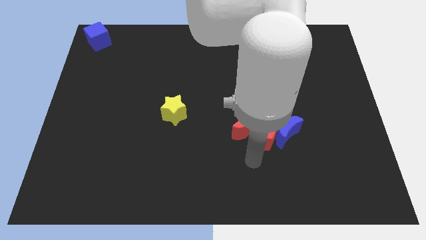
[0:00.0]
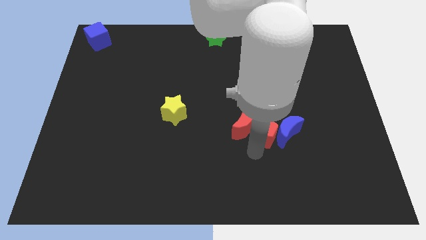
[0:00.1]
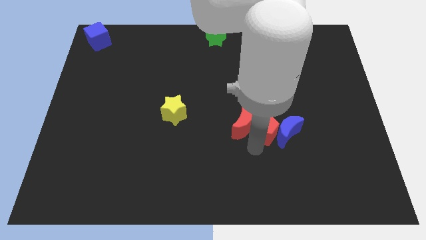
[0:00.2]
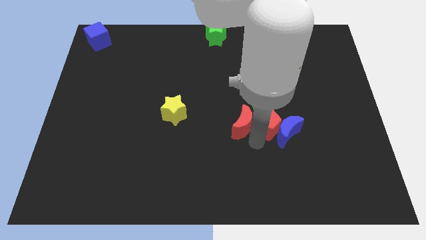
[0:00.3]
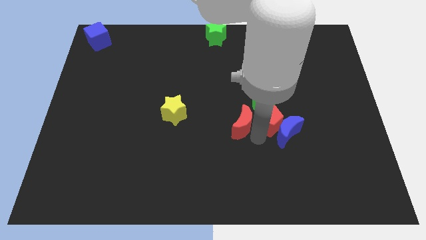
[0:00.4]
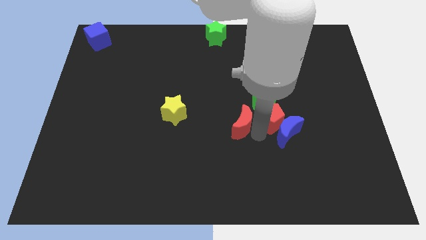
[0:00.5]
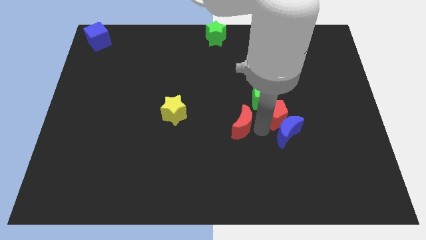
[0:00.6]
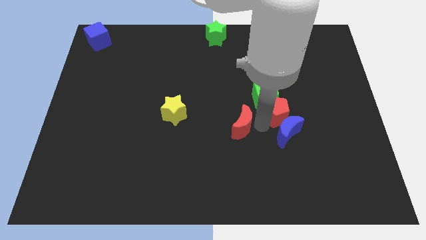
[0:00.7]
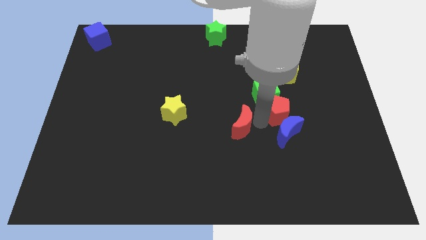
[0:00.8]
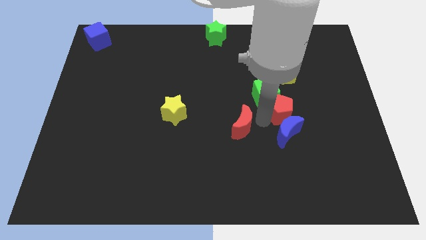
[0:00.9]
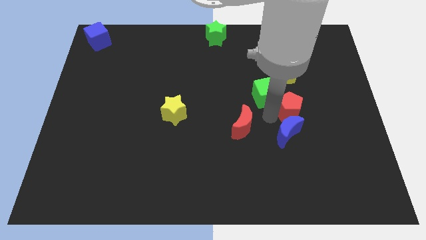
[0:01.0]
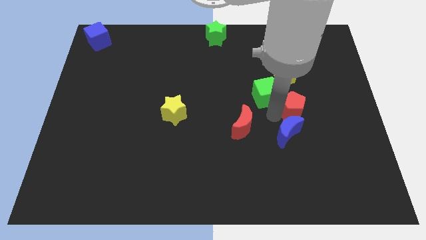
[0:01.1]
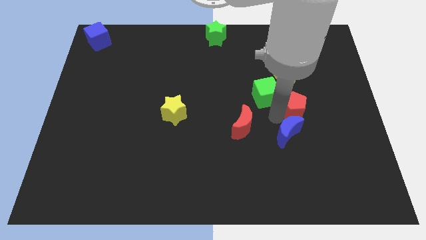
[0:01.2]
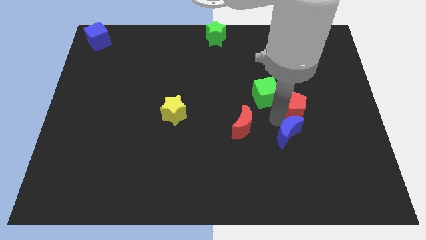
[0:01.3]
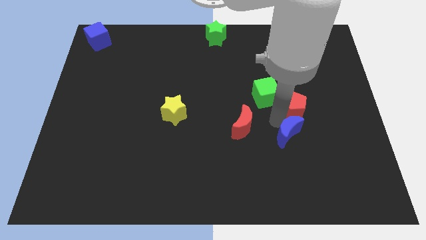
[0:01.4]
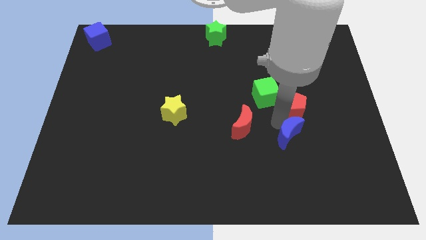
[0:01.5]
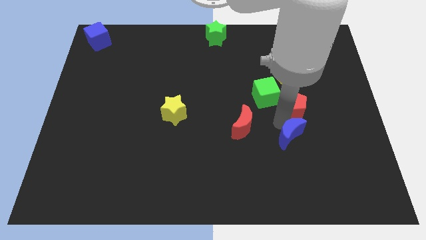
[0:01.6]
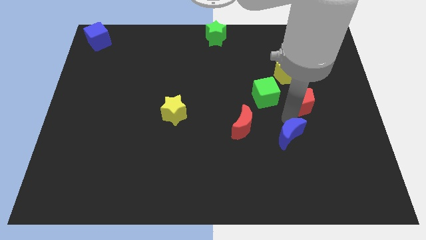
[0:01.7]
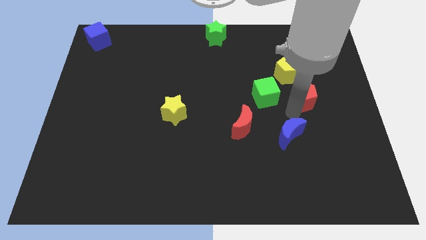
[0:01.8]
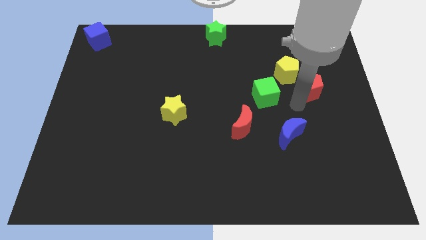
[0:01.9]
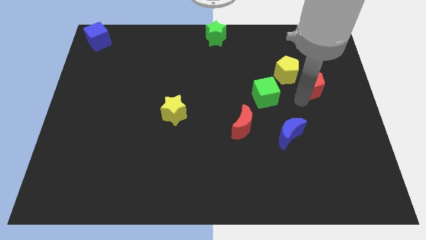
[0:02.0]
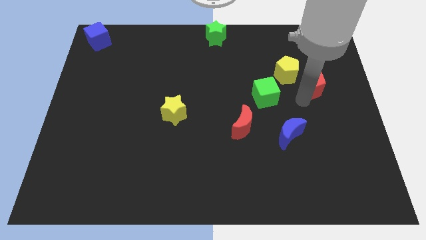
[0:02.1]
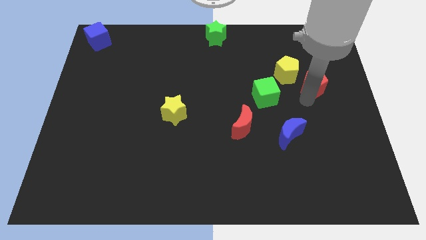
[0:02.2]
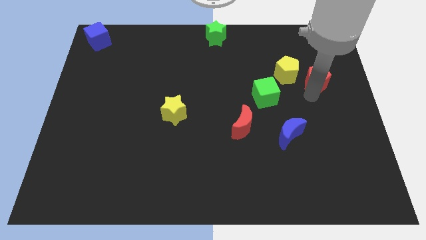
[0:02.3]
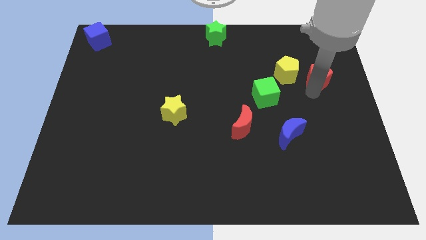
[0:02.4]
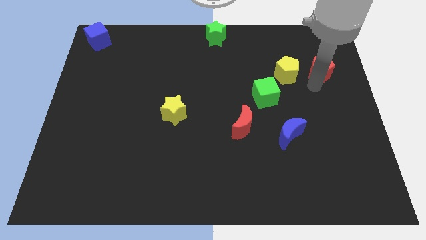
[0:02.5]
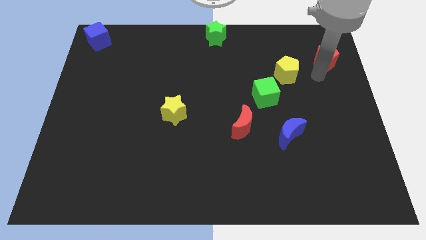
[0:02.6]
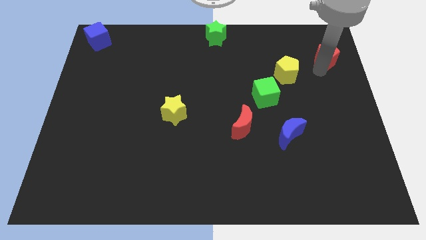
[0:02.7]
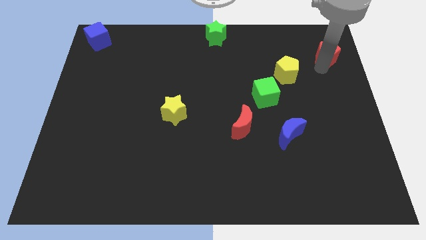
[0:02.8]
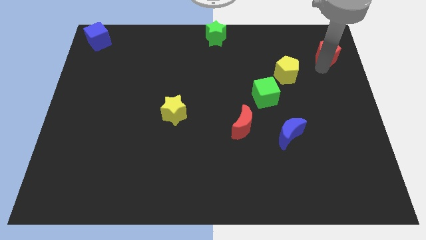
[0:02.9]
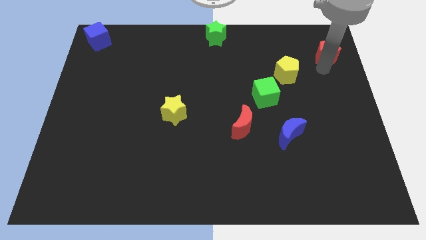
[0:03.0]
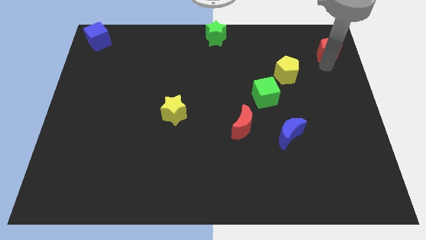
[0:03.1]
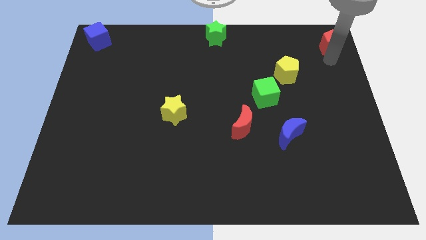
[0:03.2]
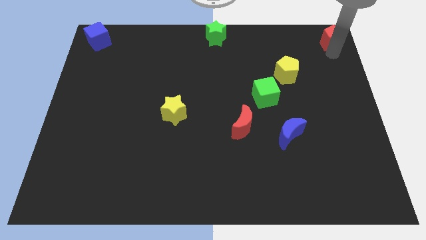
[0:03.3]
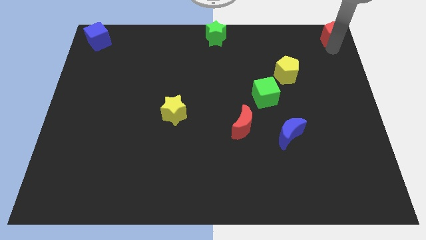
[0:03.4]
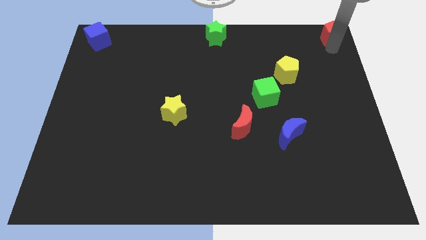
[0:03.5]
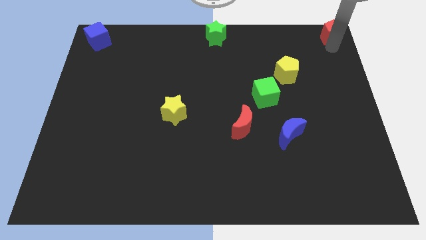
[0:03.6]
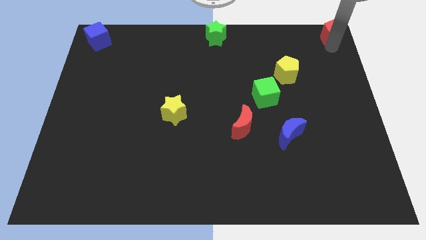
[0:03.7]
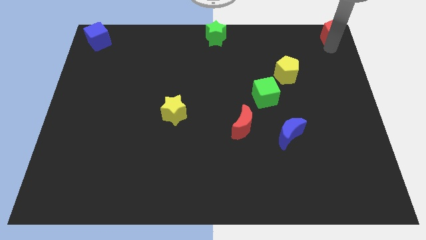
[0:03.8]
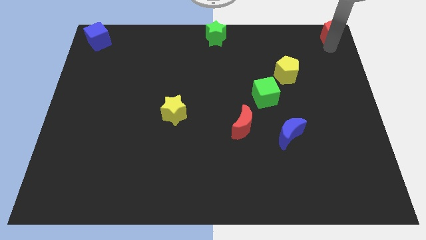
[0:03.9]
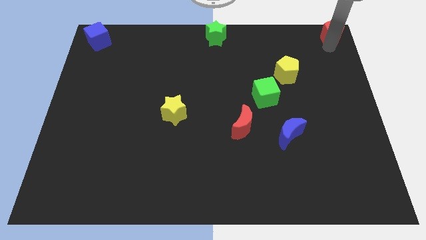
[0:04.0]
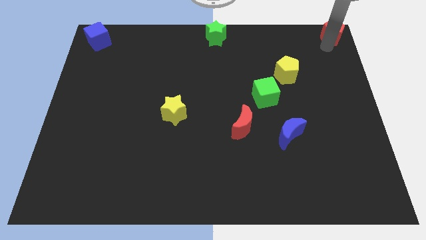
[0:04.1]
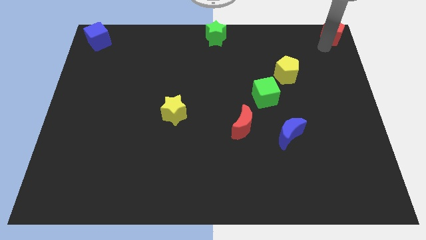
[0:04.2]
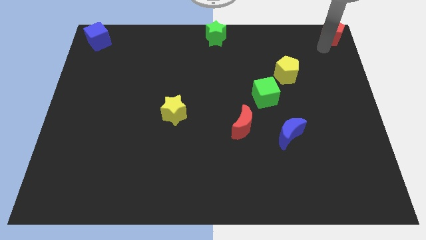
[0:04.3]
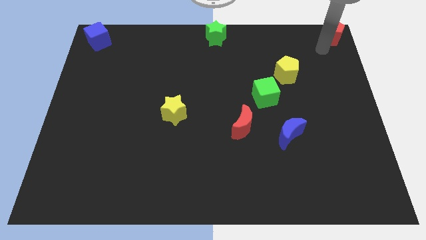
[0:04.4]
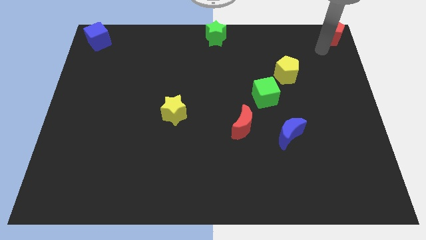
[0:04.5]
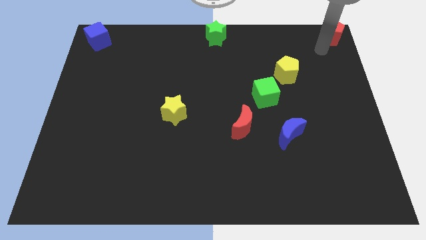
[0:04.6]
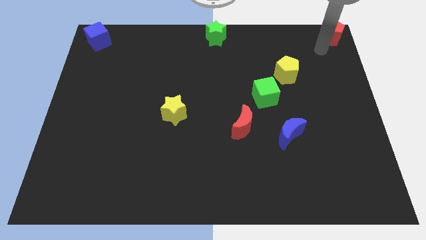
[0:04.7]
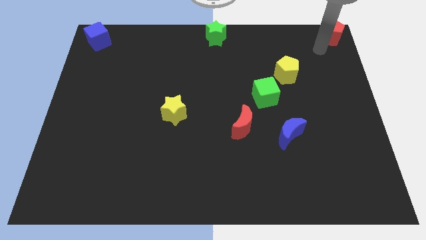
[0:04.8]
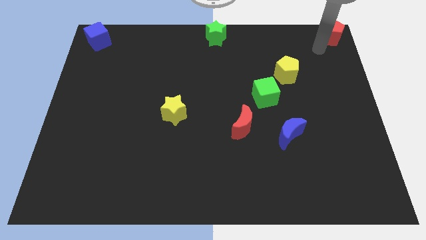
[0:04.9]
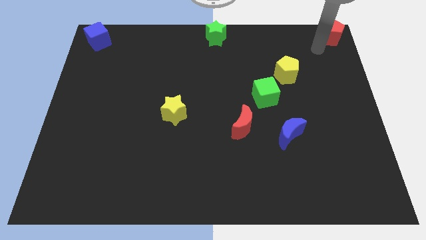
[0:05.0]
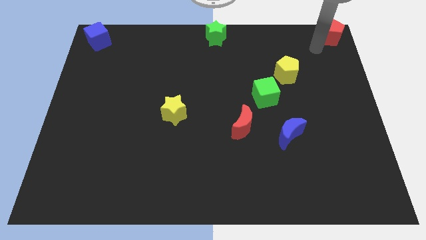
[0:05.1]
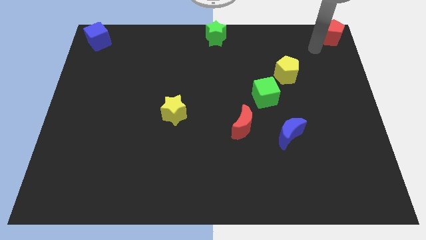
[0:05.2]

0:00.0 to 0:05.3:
move the red pentagon to the top right corner of the board

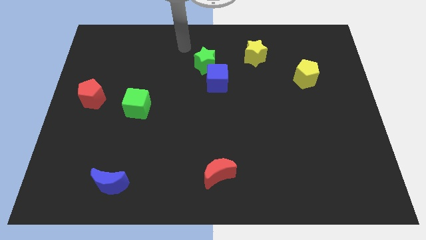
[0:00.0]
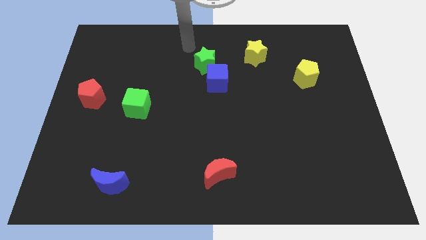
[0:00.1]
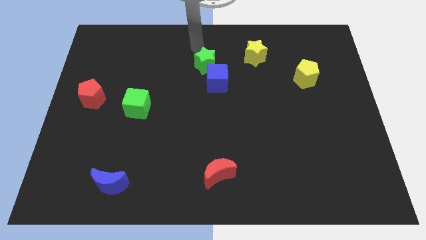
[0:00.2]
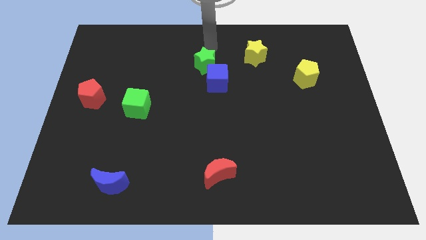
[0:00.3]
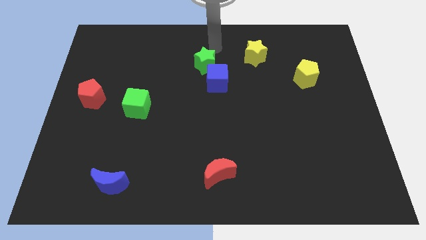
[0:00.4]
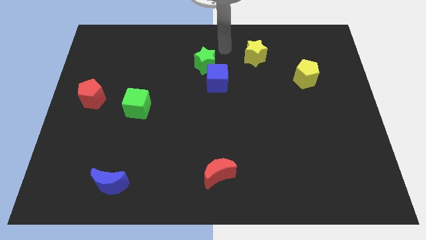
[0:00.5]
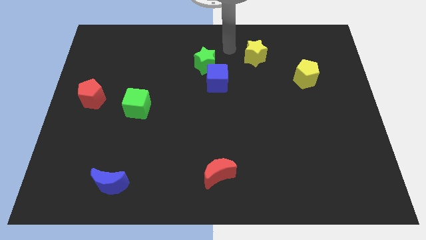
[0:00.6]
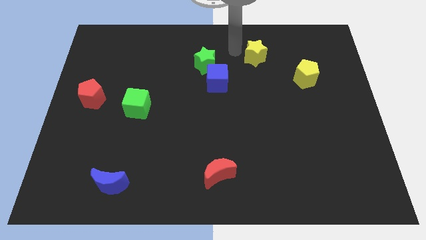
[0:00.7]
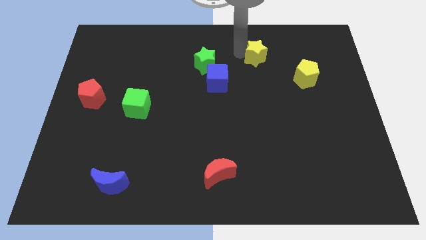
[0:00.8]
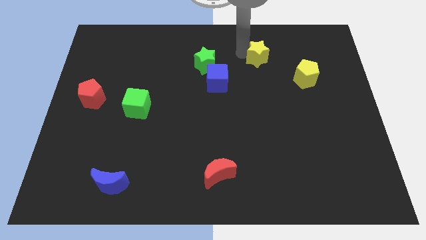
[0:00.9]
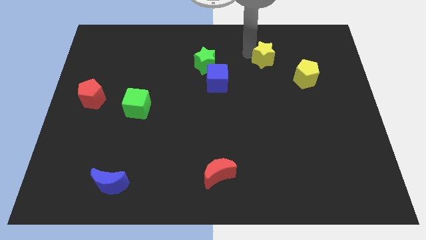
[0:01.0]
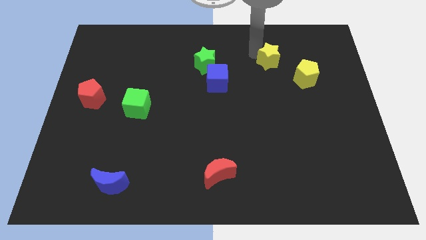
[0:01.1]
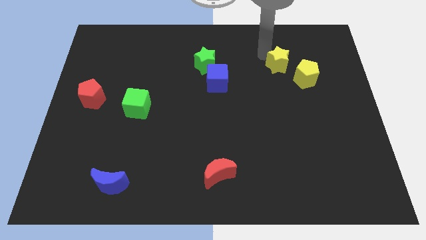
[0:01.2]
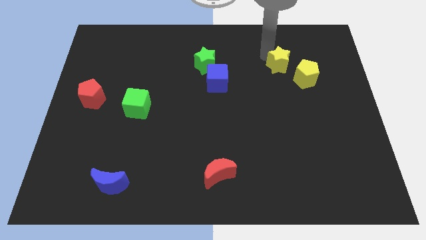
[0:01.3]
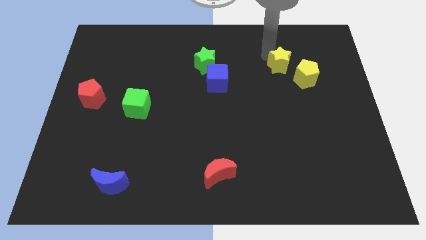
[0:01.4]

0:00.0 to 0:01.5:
touch the yellow star

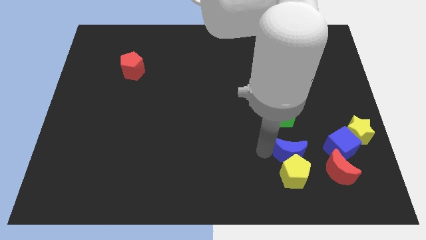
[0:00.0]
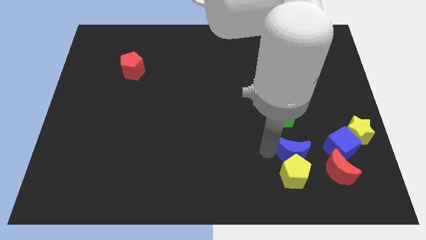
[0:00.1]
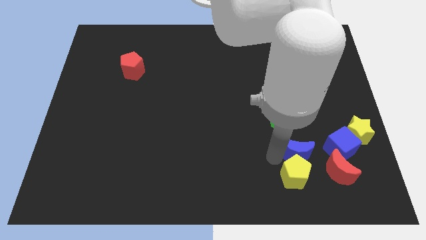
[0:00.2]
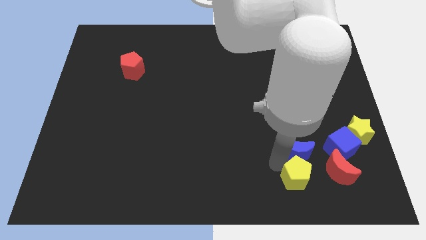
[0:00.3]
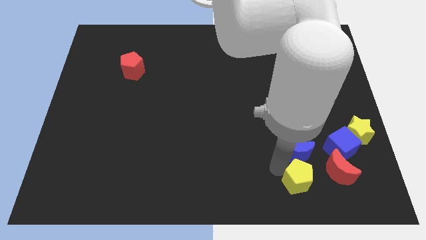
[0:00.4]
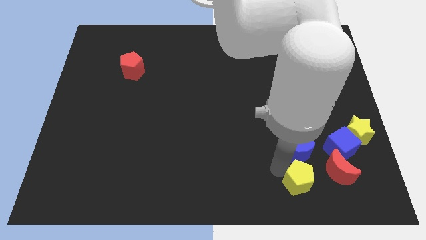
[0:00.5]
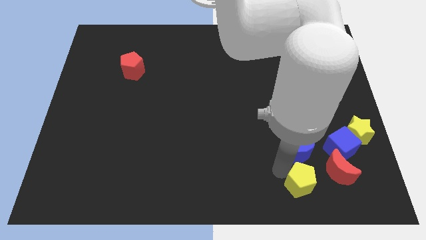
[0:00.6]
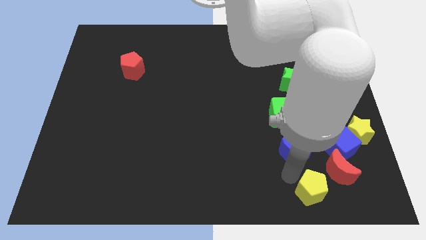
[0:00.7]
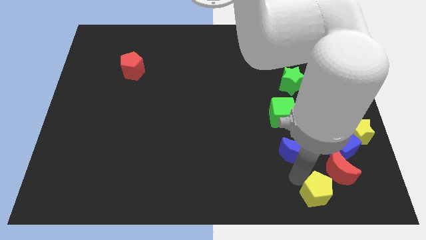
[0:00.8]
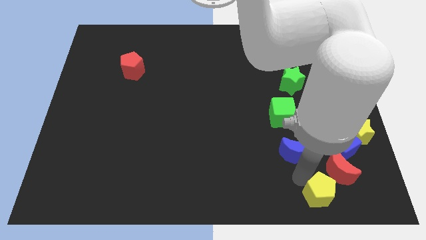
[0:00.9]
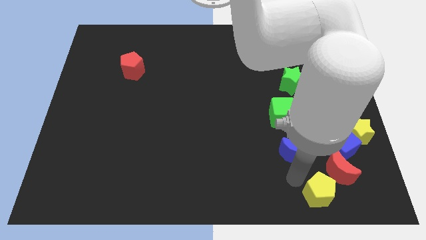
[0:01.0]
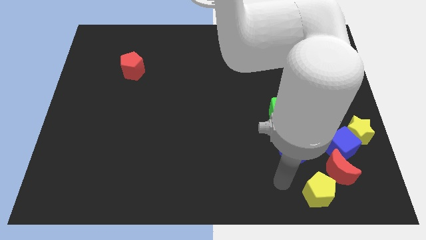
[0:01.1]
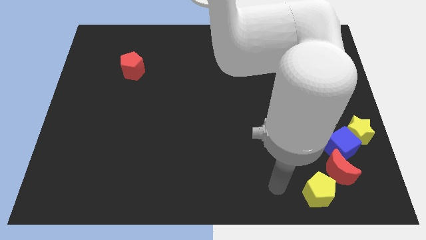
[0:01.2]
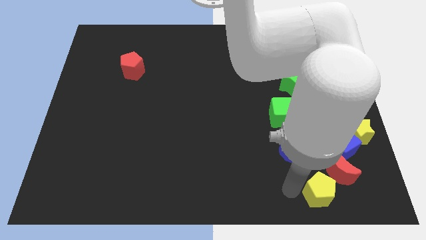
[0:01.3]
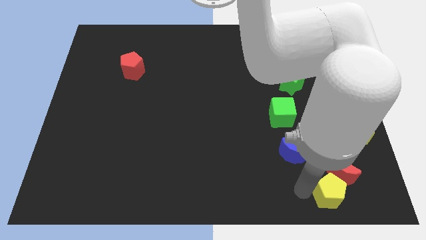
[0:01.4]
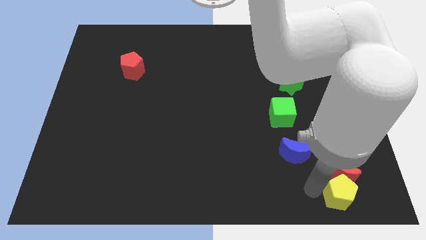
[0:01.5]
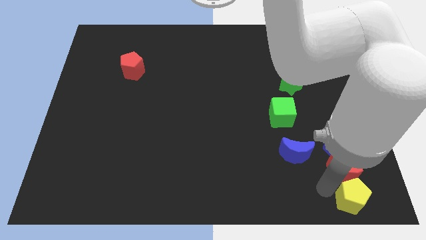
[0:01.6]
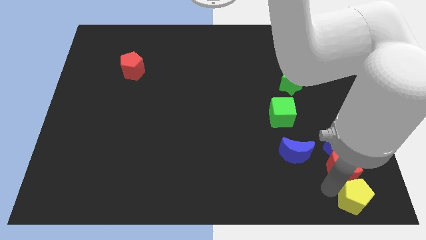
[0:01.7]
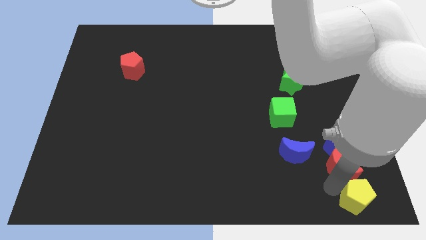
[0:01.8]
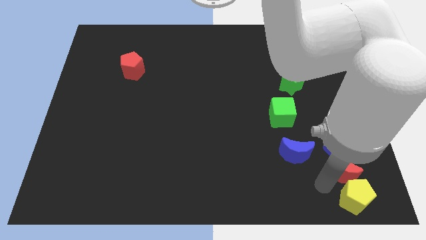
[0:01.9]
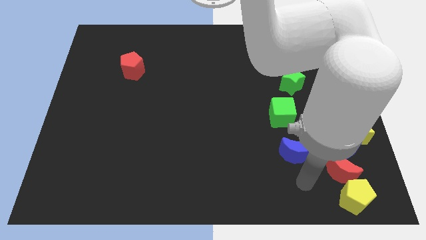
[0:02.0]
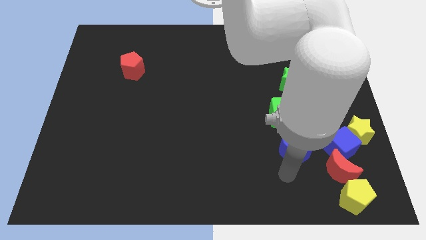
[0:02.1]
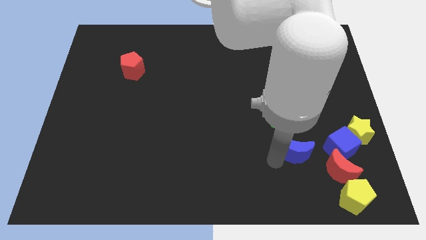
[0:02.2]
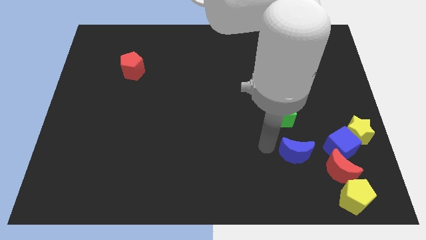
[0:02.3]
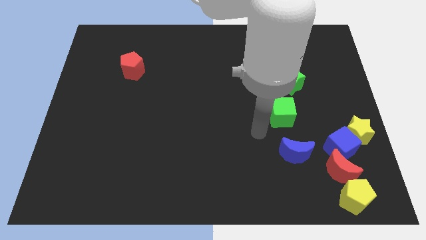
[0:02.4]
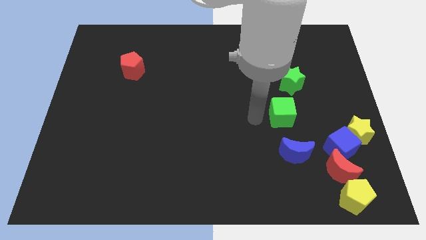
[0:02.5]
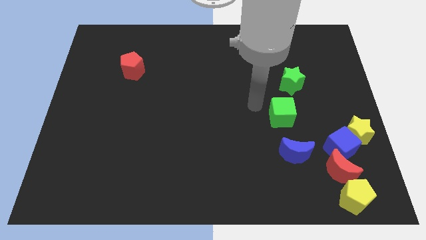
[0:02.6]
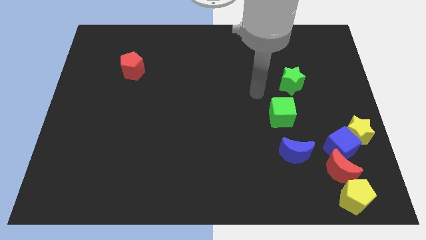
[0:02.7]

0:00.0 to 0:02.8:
move the yellow pentagon to the bottom side of the red moon
